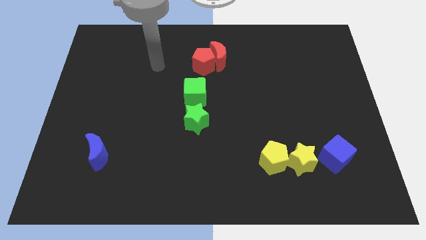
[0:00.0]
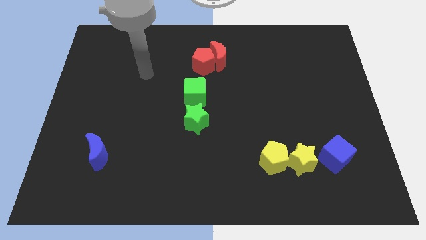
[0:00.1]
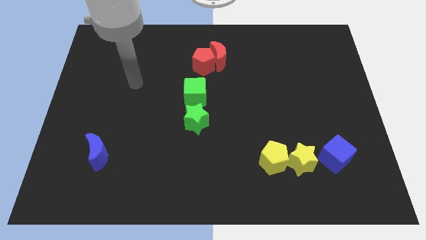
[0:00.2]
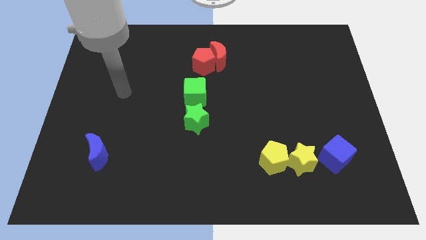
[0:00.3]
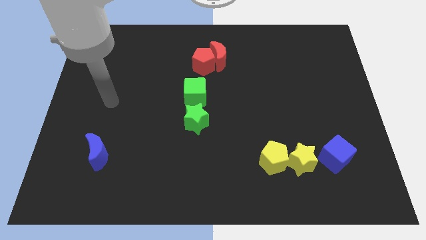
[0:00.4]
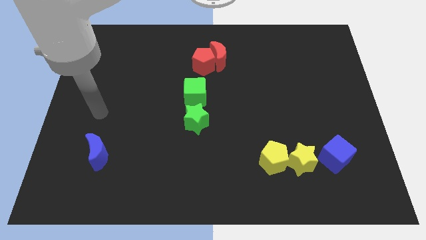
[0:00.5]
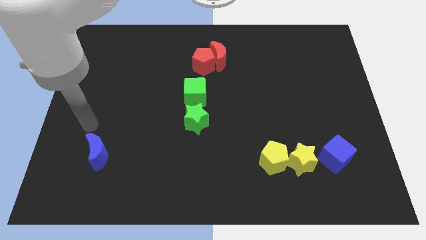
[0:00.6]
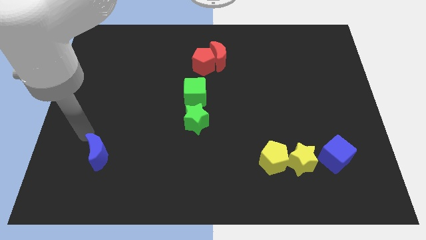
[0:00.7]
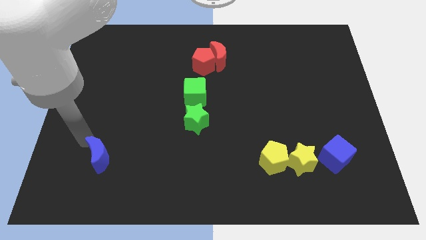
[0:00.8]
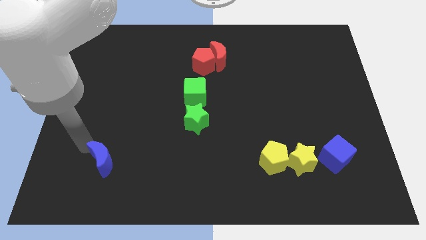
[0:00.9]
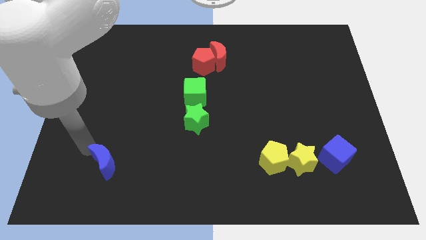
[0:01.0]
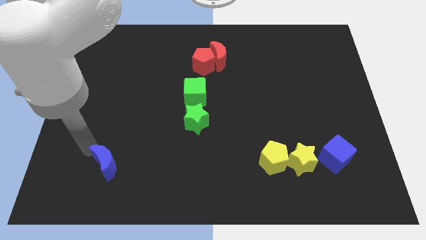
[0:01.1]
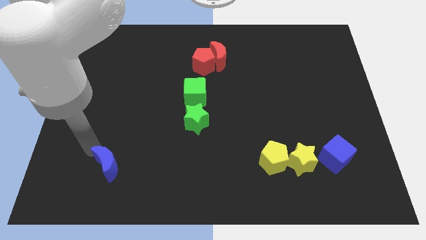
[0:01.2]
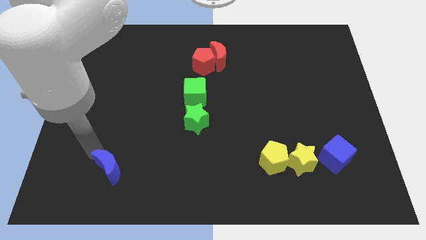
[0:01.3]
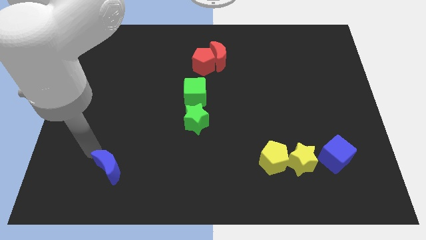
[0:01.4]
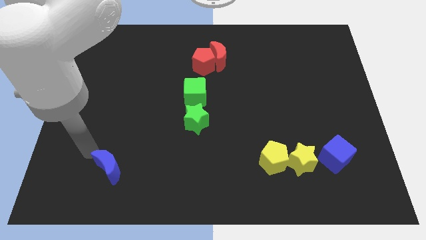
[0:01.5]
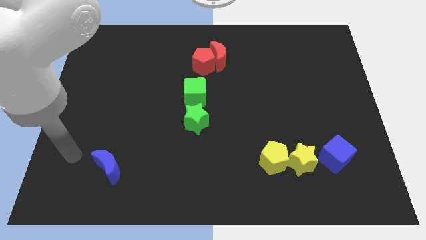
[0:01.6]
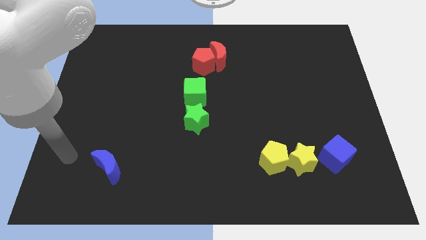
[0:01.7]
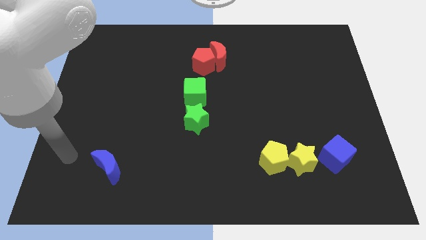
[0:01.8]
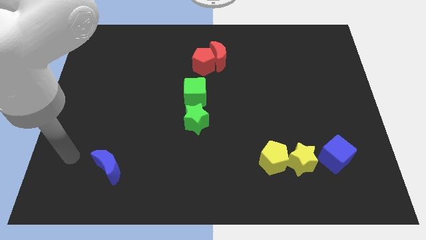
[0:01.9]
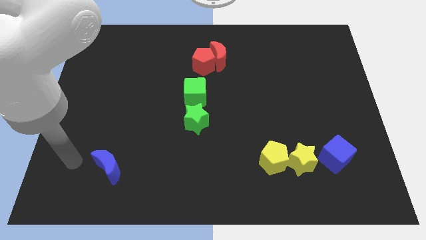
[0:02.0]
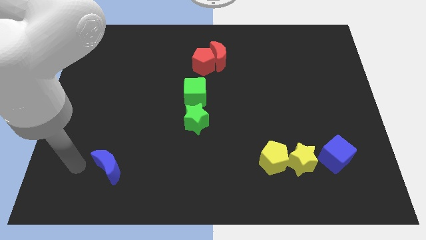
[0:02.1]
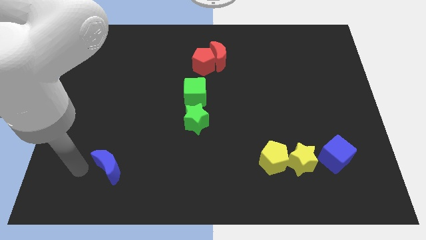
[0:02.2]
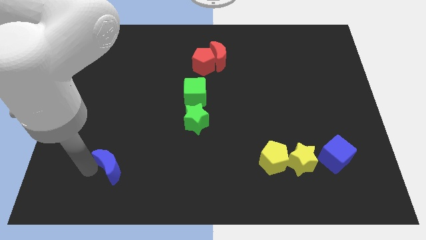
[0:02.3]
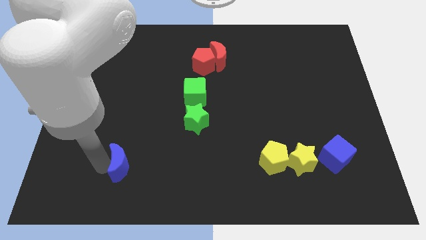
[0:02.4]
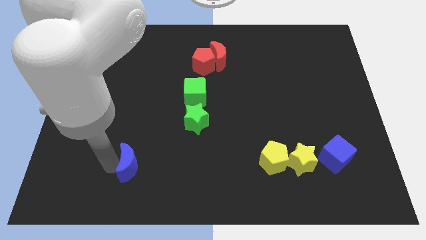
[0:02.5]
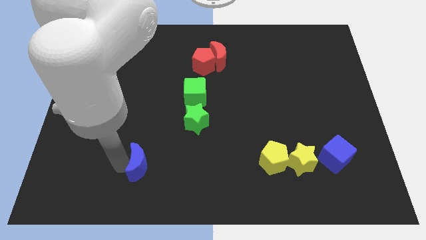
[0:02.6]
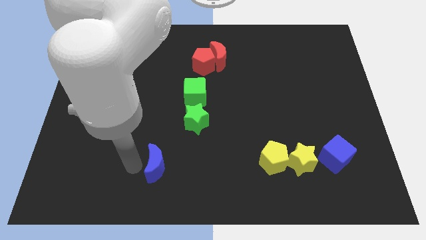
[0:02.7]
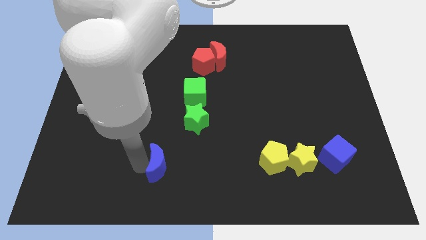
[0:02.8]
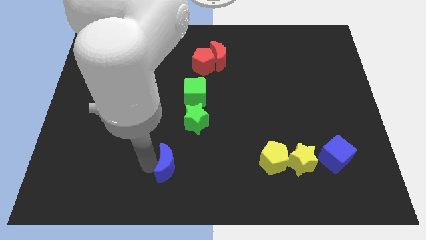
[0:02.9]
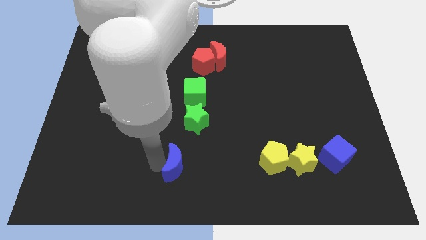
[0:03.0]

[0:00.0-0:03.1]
slide blue moon to the left of yellow pentagon

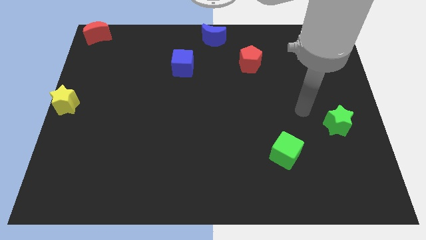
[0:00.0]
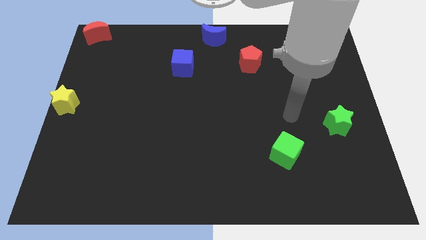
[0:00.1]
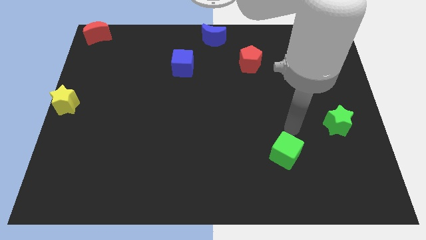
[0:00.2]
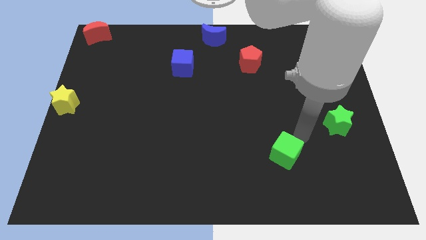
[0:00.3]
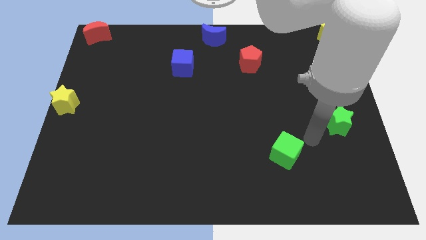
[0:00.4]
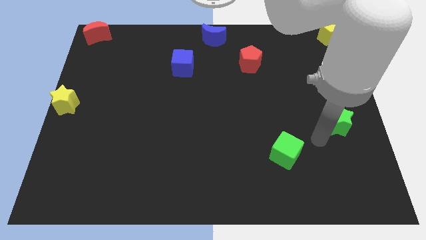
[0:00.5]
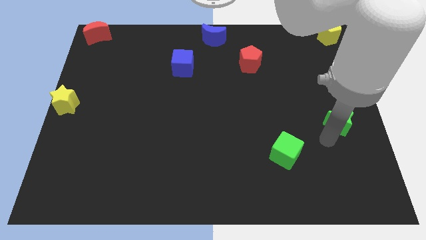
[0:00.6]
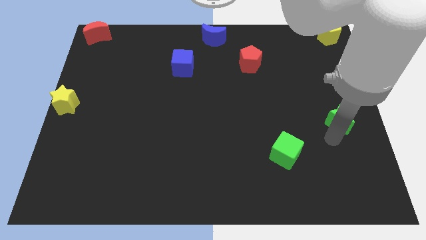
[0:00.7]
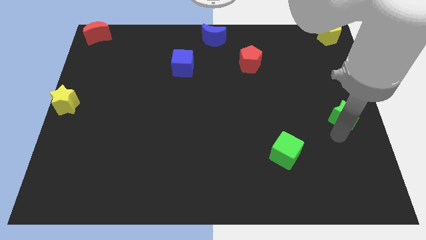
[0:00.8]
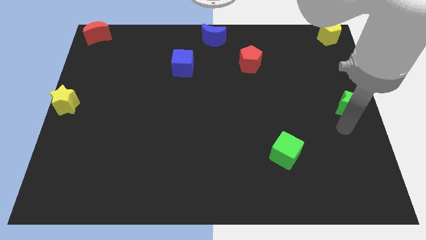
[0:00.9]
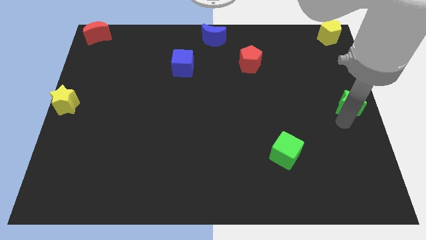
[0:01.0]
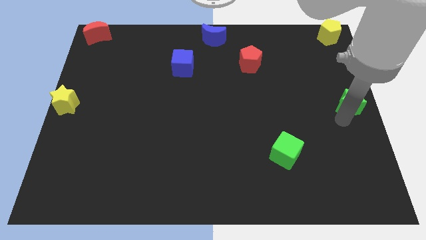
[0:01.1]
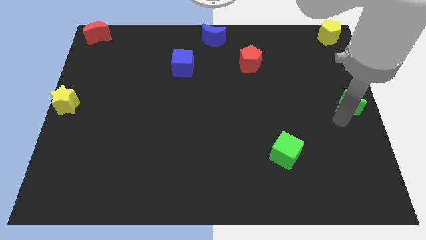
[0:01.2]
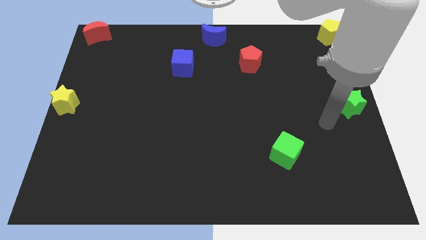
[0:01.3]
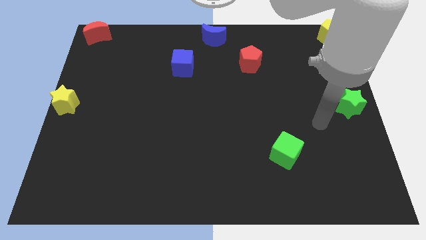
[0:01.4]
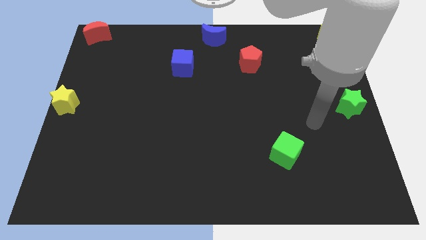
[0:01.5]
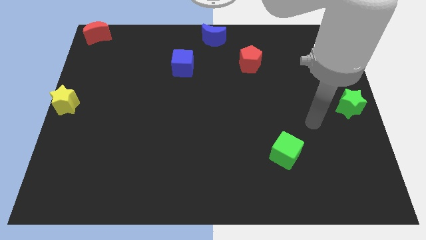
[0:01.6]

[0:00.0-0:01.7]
push the green star at the center right of the board

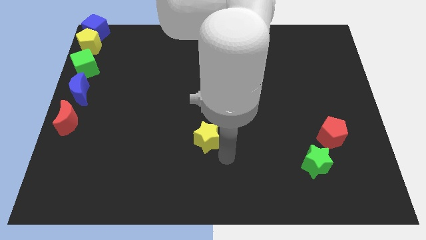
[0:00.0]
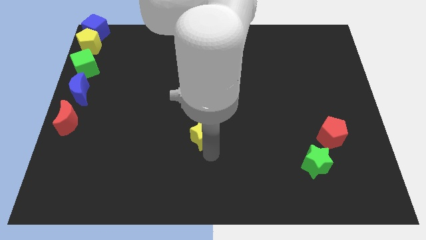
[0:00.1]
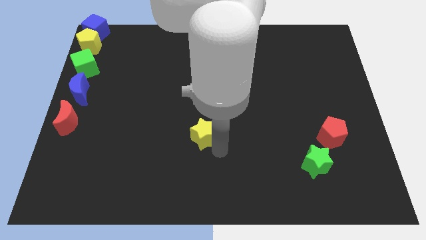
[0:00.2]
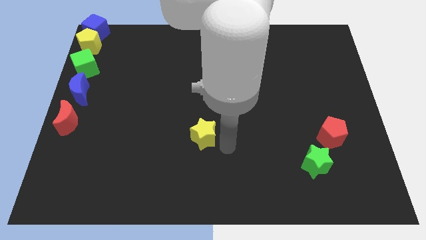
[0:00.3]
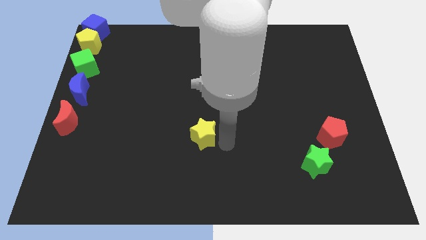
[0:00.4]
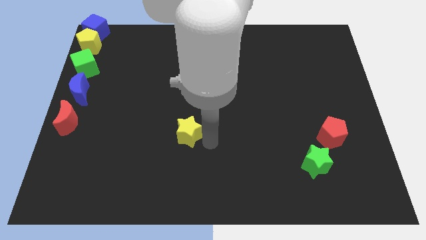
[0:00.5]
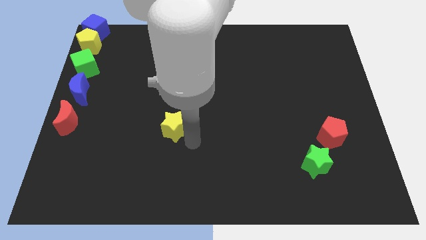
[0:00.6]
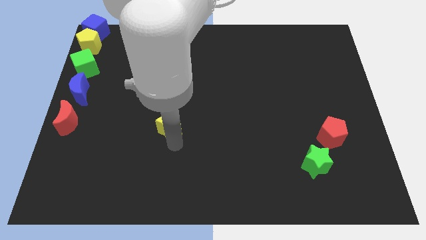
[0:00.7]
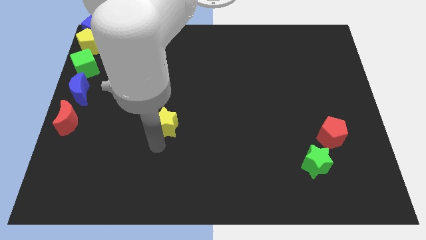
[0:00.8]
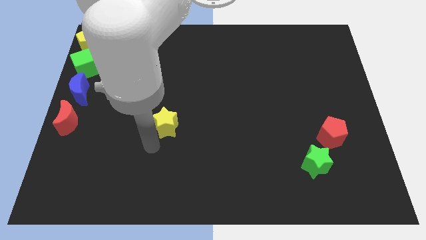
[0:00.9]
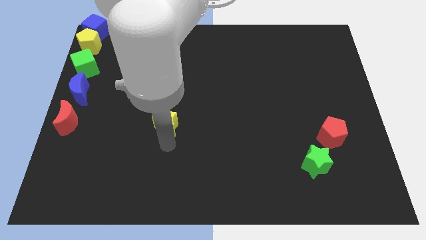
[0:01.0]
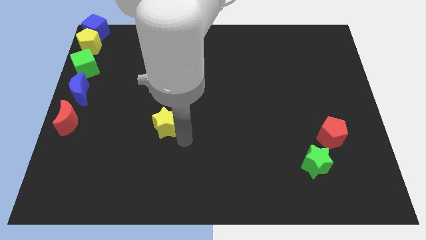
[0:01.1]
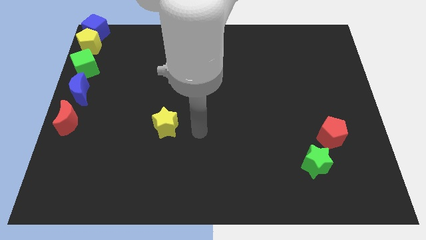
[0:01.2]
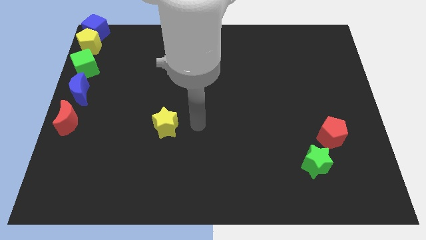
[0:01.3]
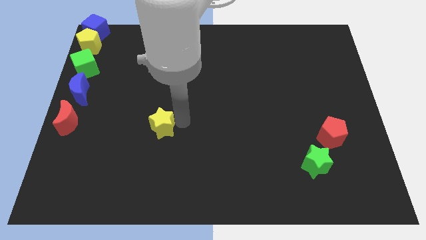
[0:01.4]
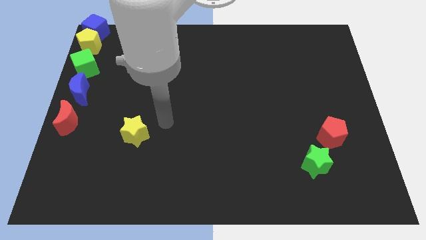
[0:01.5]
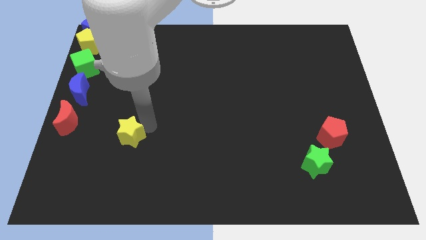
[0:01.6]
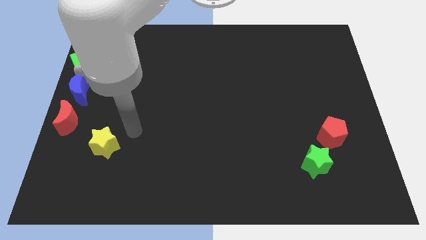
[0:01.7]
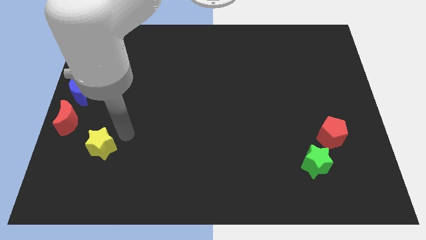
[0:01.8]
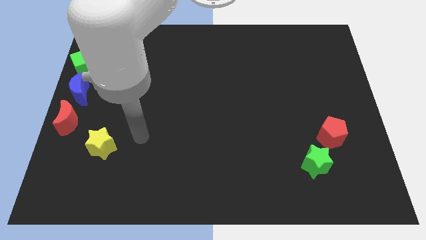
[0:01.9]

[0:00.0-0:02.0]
place the yellow star diagonal to the red crescent

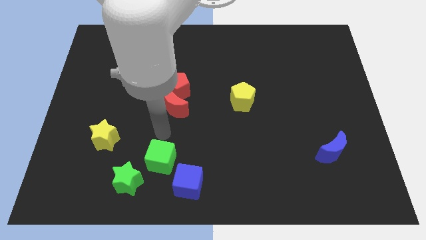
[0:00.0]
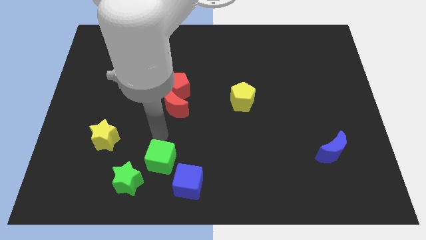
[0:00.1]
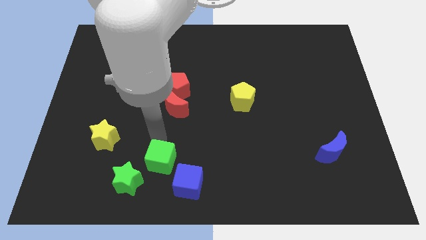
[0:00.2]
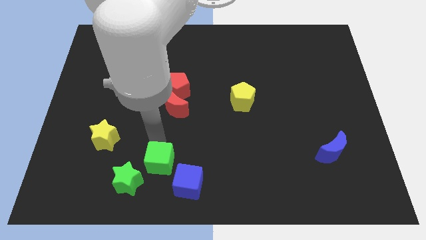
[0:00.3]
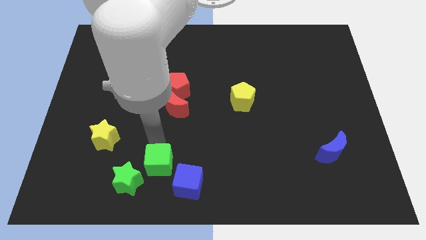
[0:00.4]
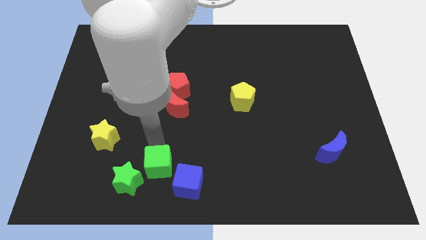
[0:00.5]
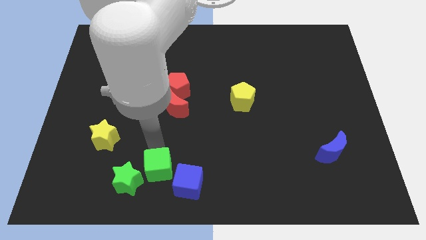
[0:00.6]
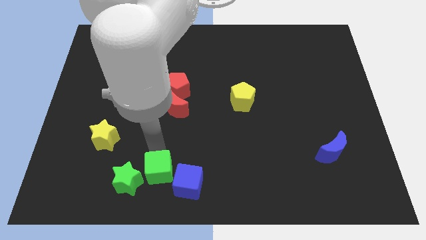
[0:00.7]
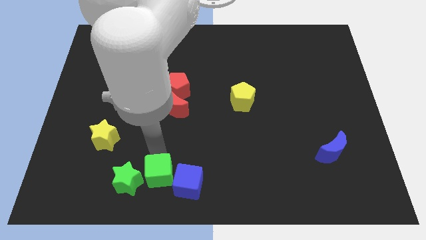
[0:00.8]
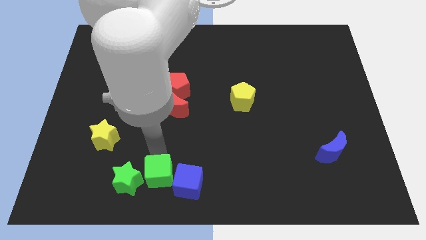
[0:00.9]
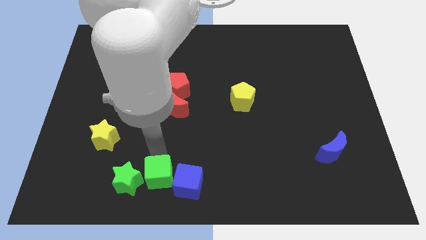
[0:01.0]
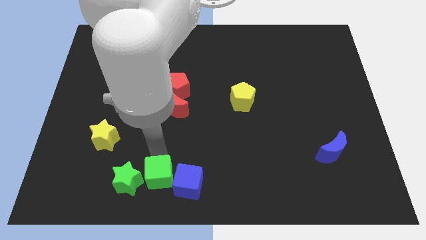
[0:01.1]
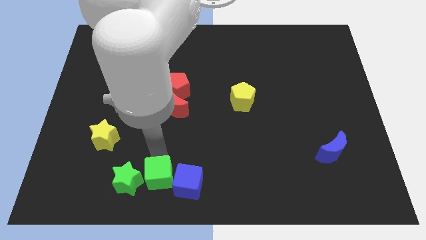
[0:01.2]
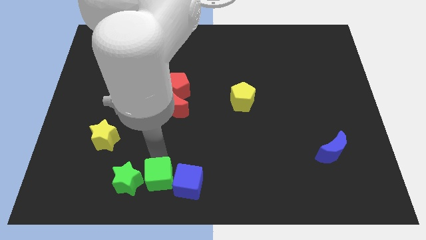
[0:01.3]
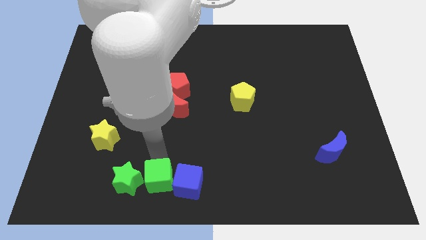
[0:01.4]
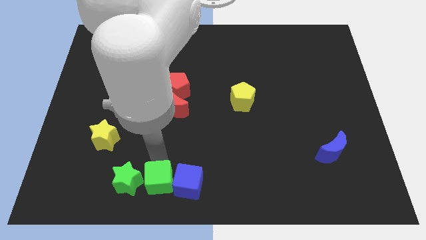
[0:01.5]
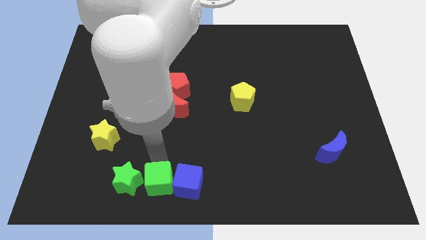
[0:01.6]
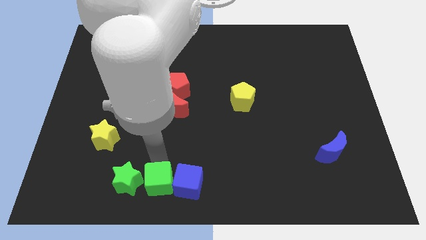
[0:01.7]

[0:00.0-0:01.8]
drag the green cube between blue cube and green star

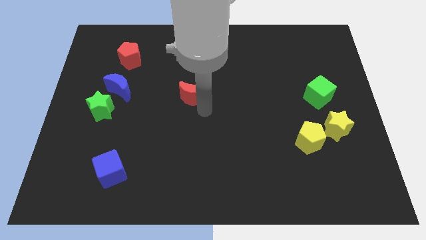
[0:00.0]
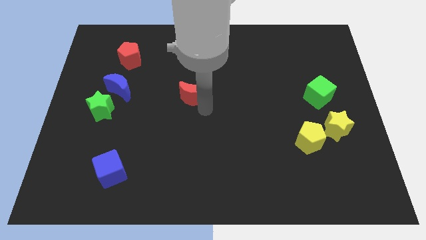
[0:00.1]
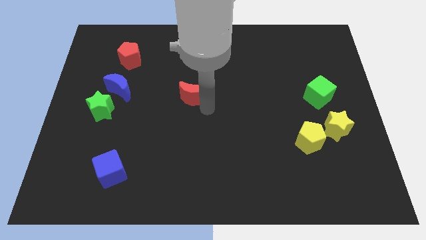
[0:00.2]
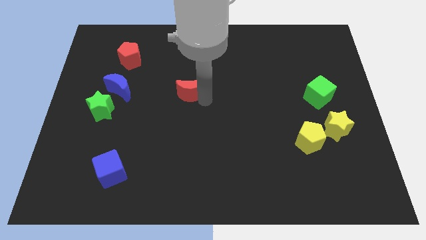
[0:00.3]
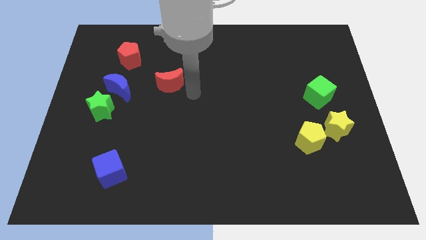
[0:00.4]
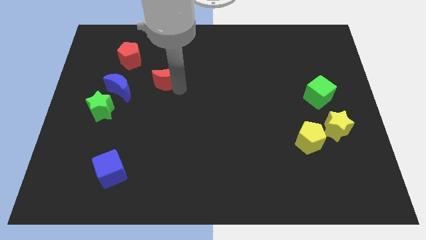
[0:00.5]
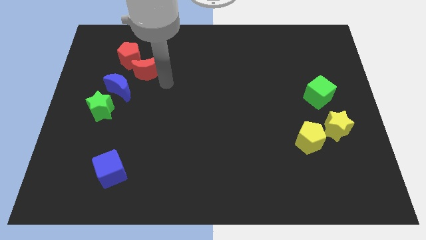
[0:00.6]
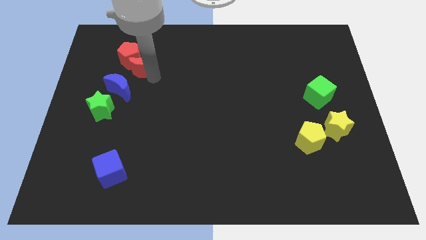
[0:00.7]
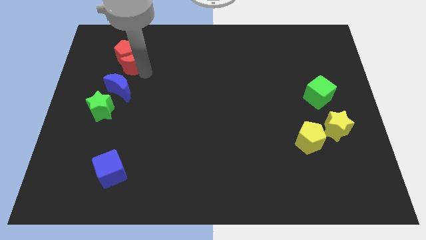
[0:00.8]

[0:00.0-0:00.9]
push the red crescent into red pentagon
